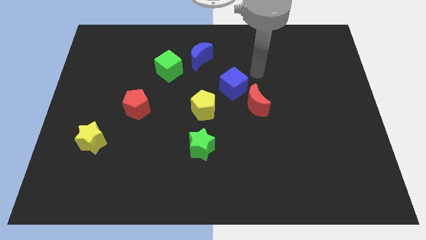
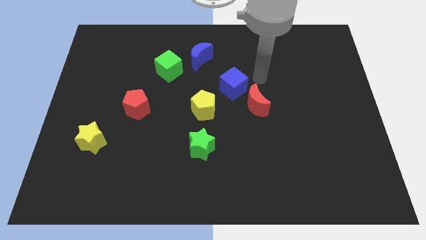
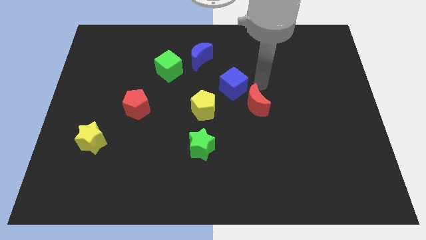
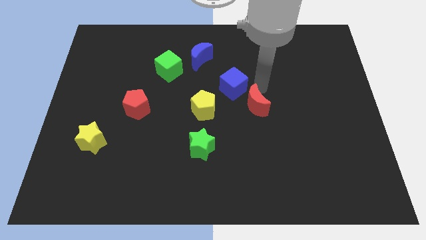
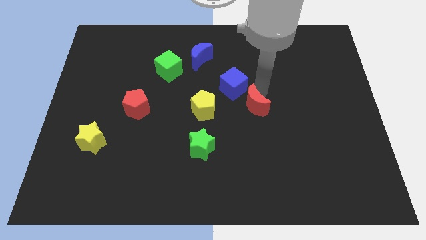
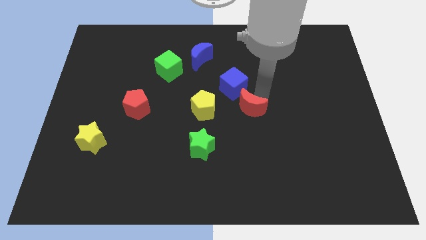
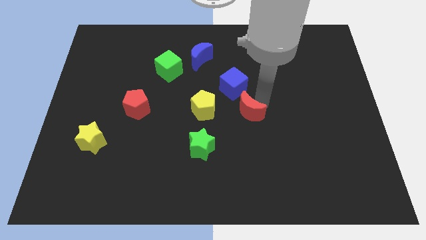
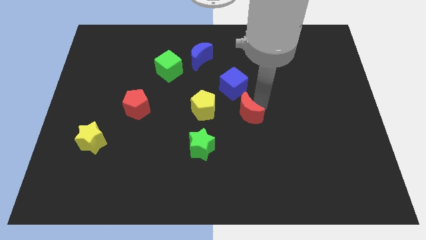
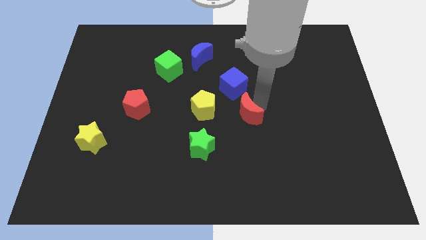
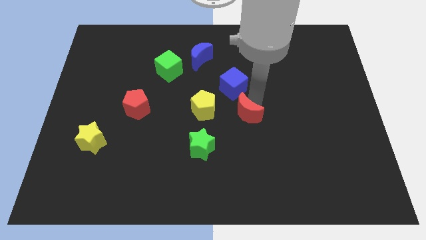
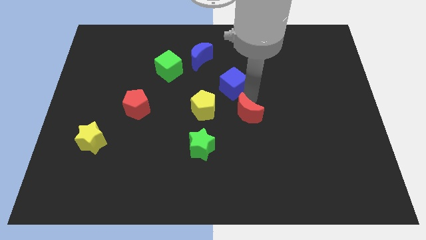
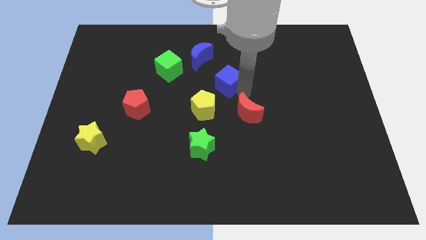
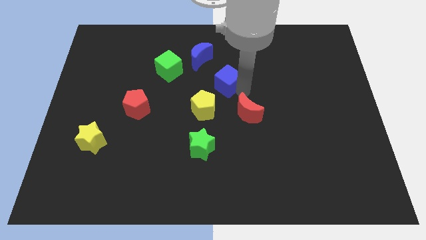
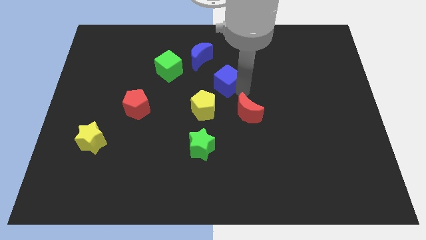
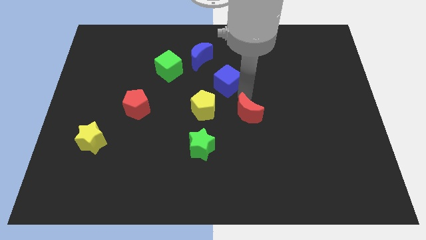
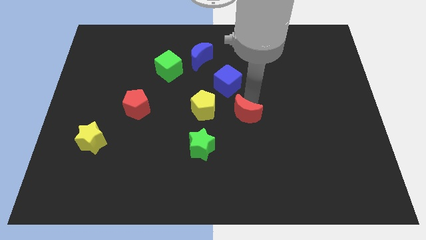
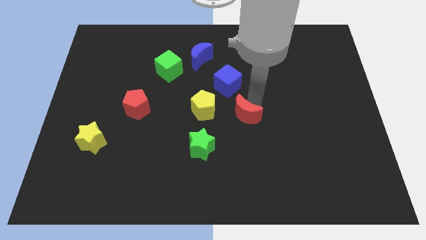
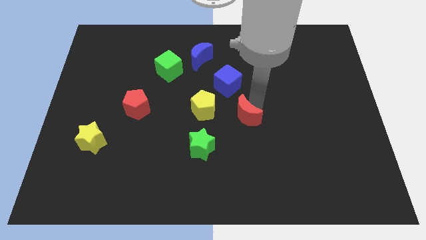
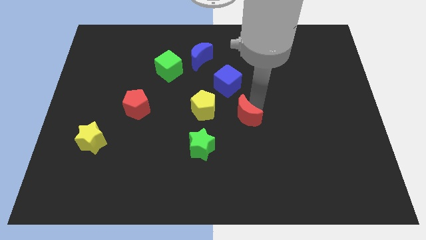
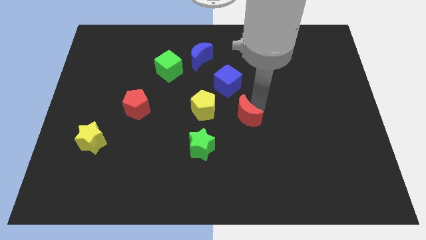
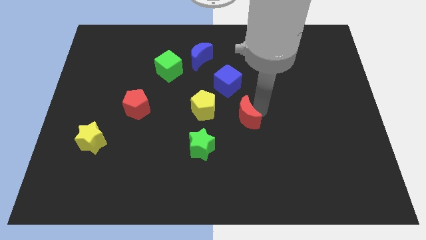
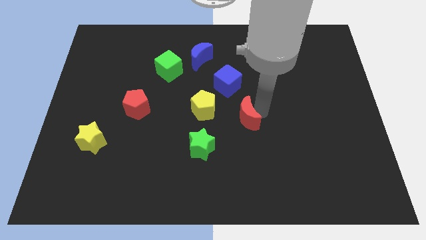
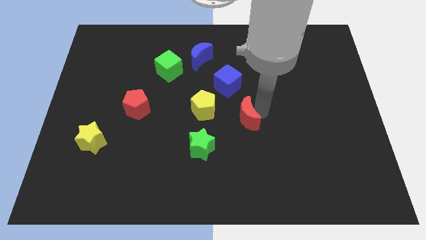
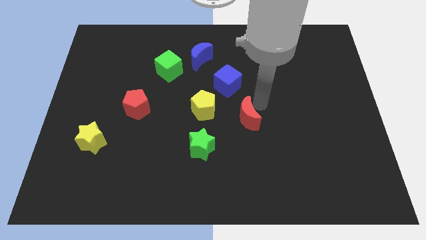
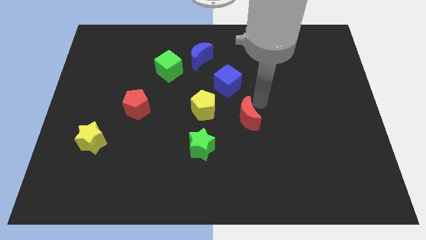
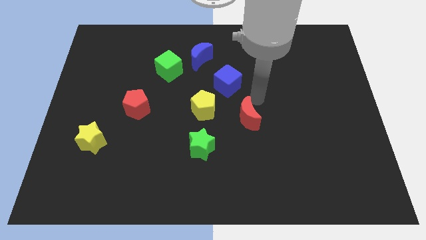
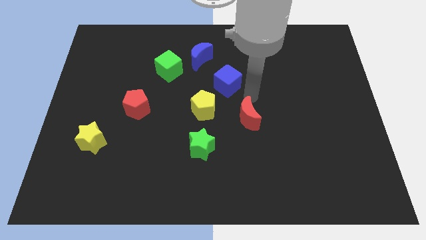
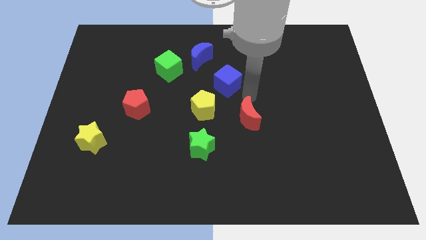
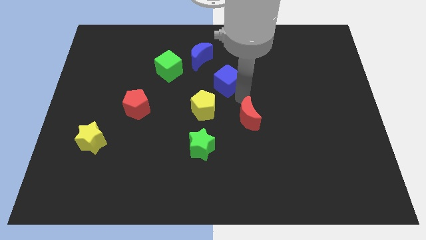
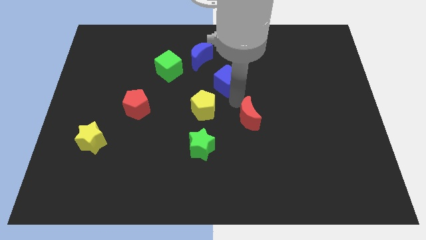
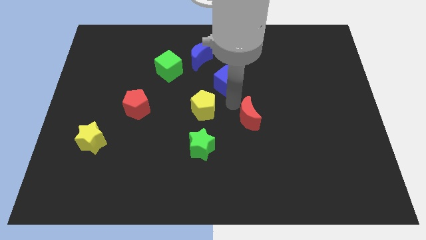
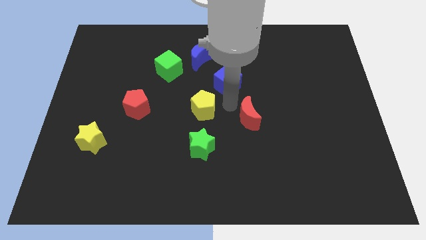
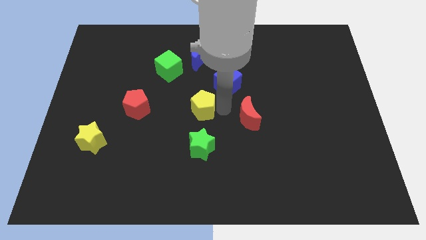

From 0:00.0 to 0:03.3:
place your arm in between yellow pentagon and red moon

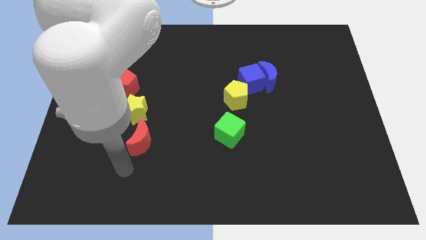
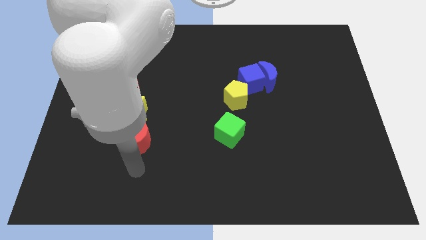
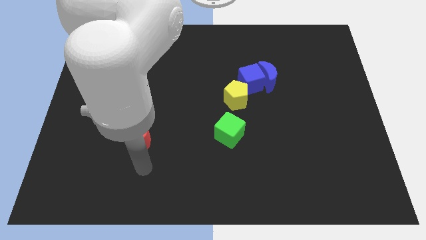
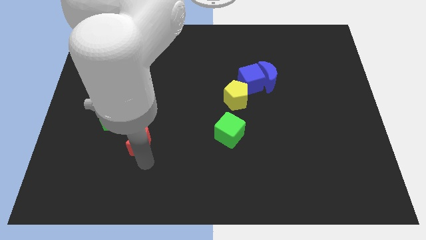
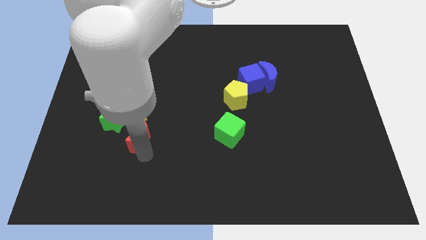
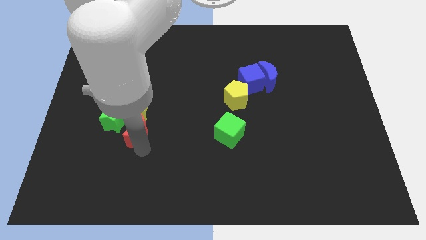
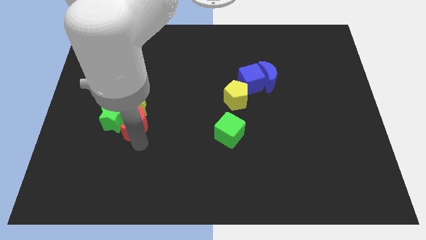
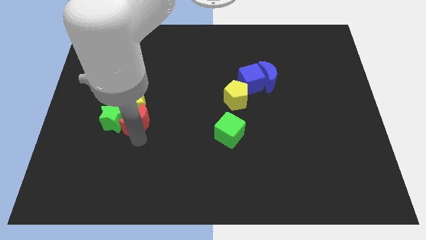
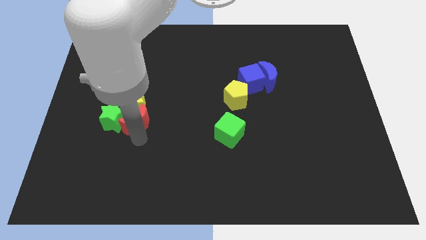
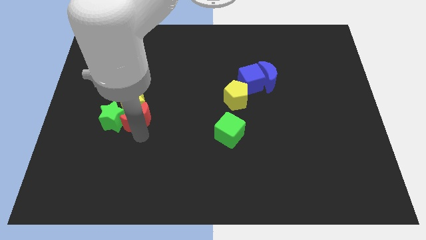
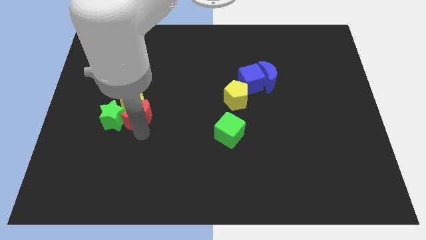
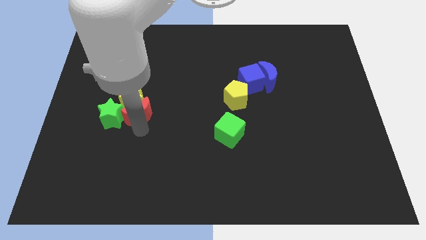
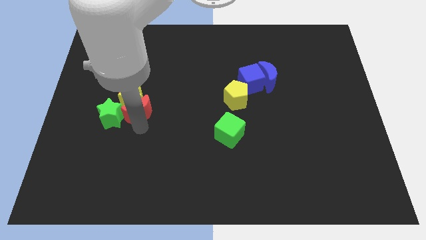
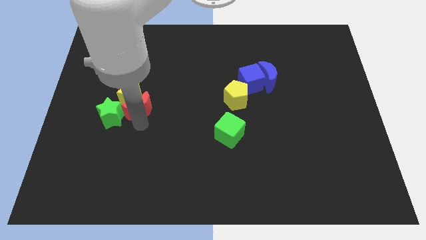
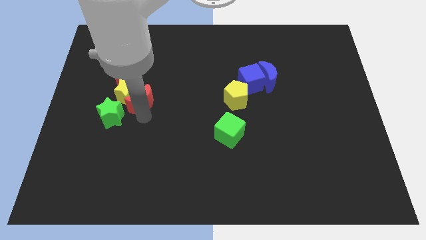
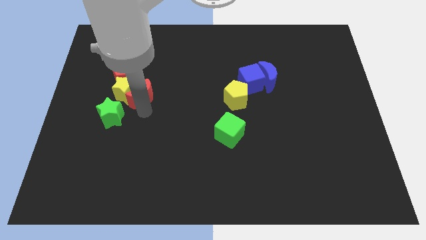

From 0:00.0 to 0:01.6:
push the red moon into the yellow star

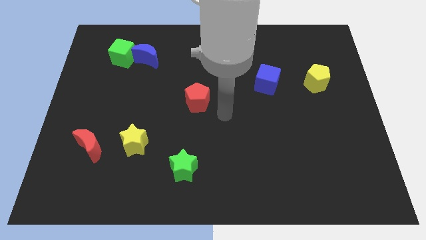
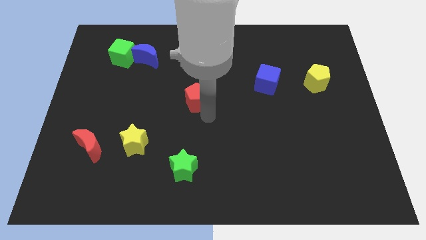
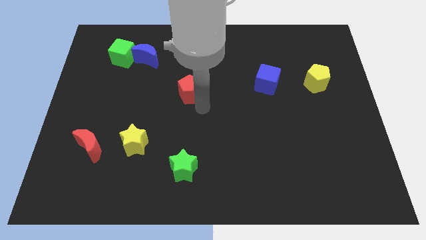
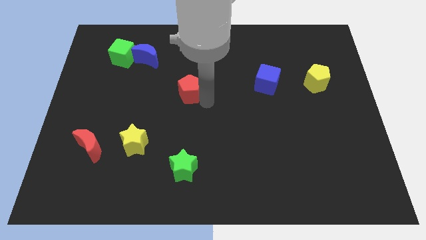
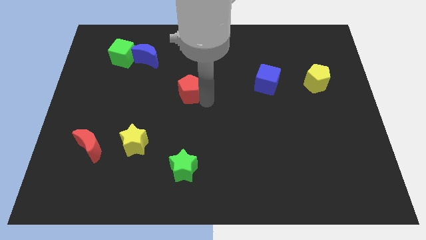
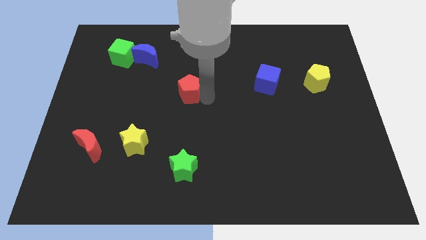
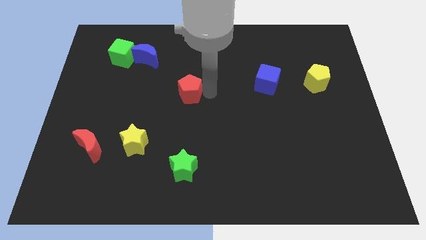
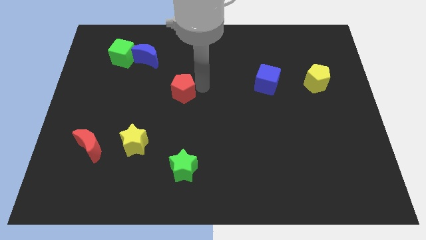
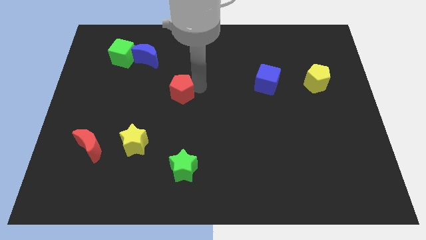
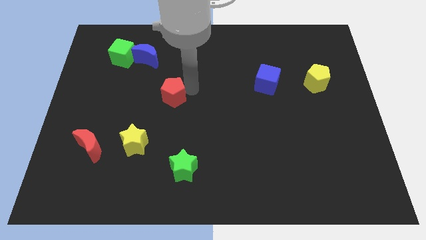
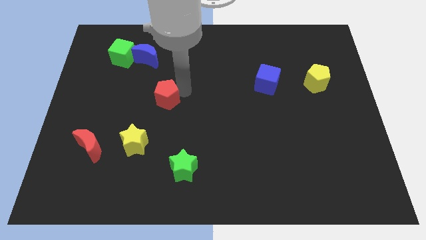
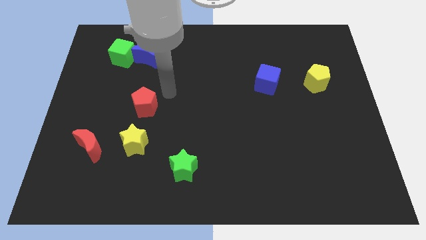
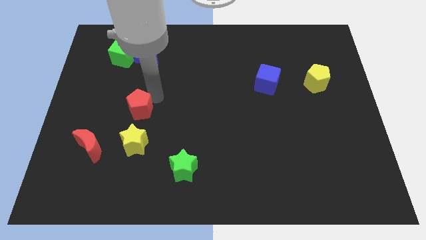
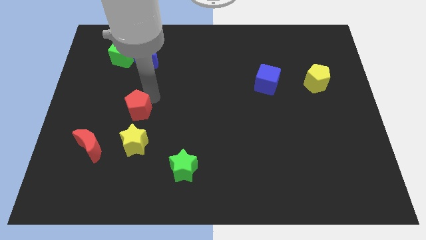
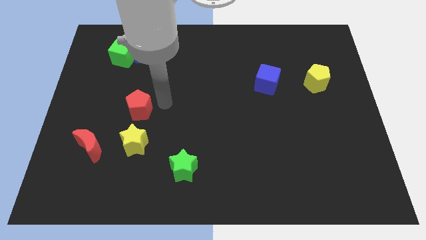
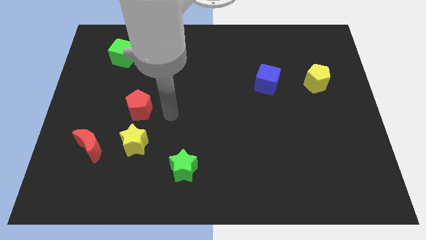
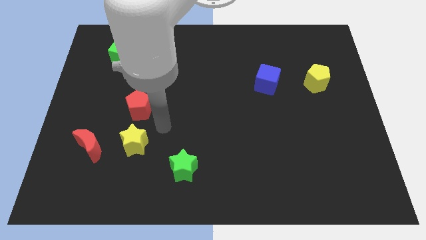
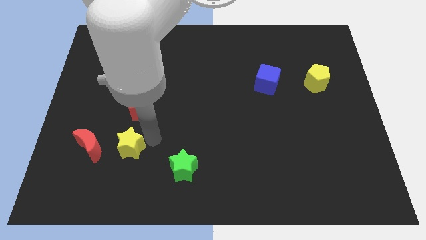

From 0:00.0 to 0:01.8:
place the red pentagon above the yellow star

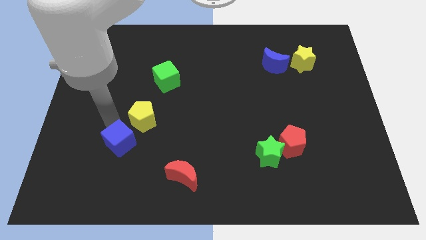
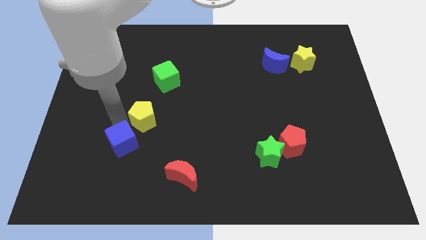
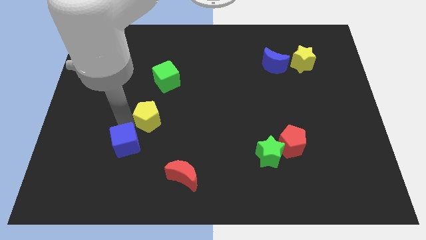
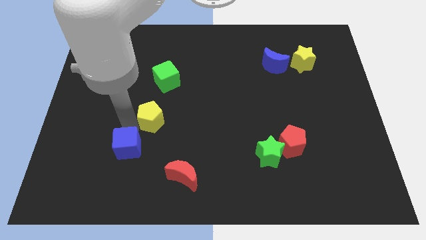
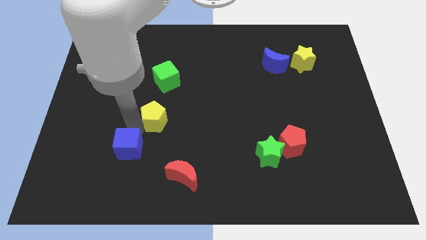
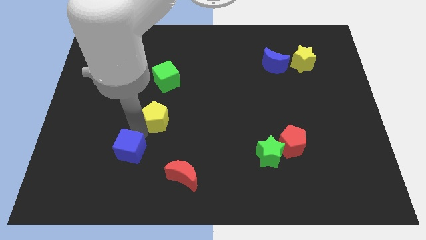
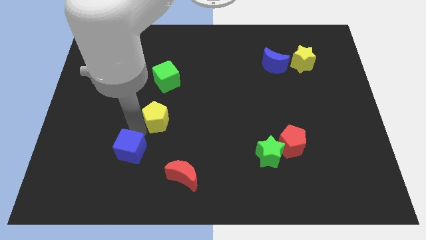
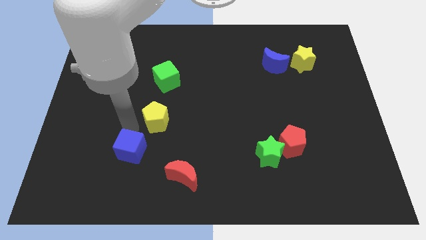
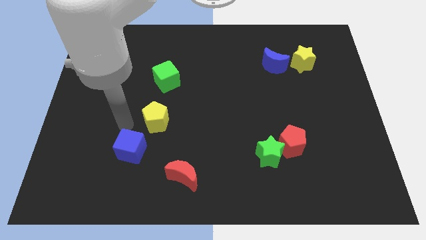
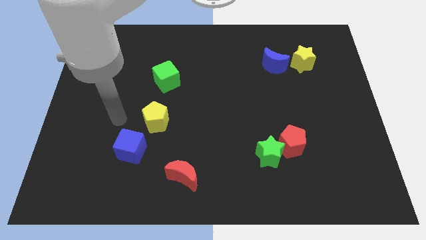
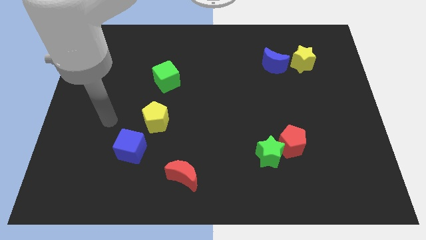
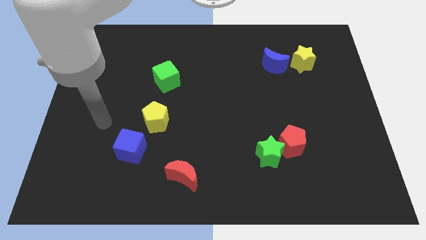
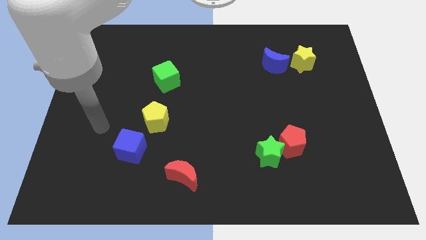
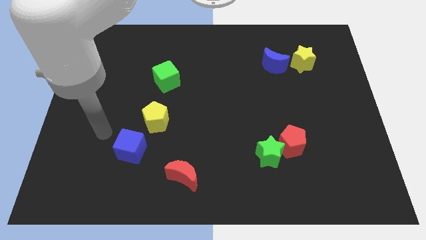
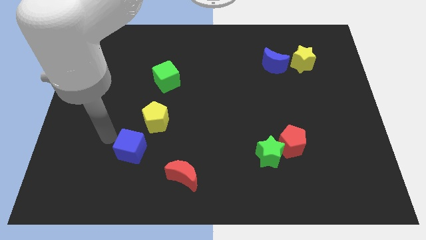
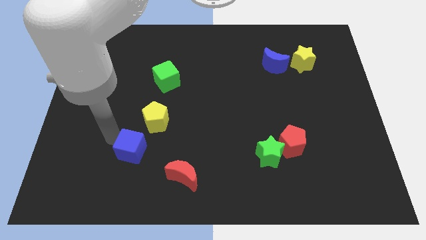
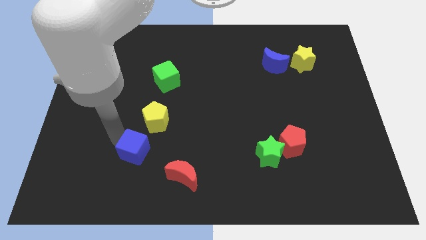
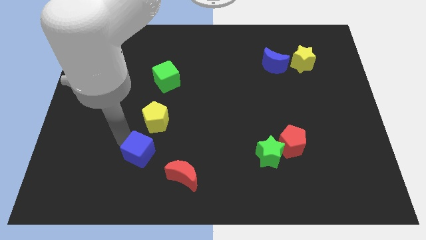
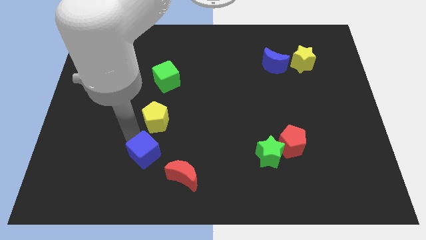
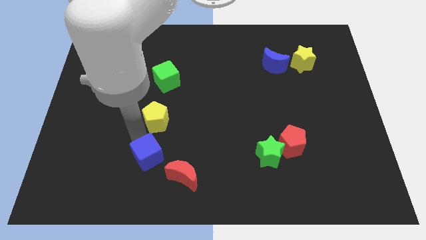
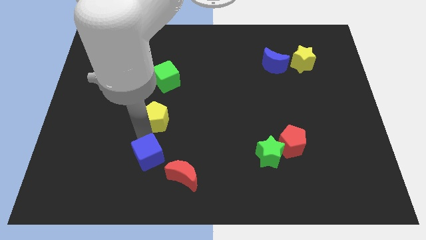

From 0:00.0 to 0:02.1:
place the blue cube below the yellow pentagon
